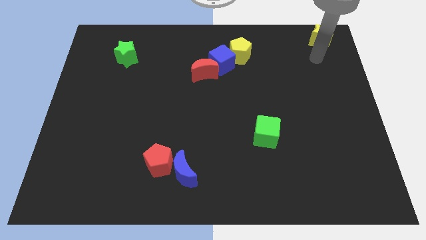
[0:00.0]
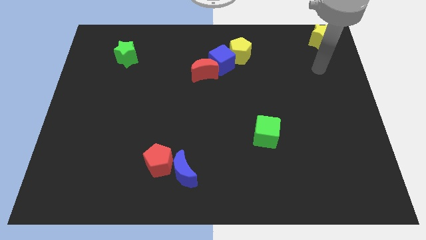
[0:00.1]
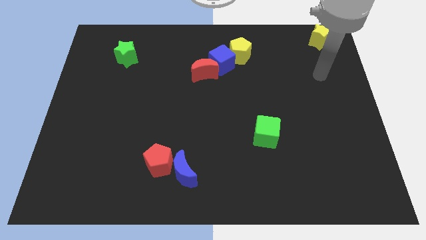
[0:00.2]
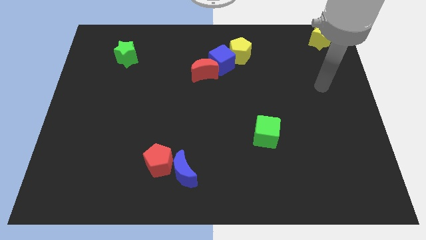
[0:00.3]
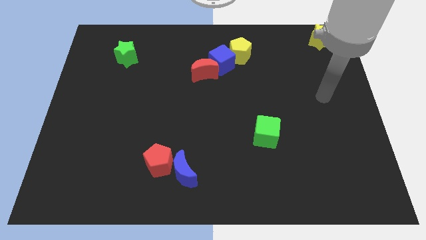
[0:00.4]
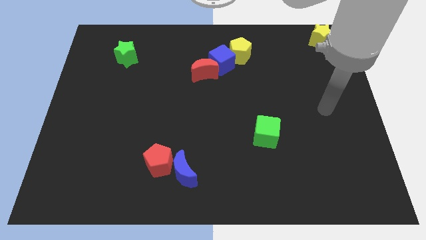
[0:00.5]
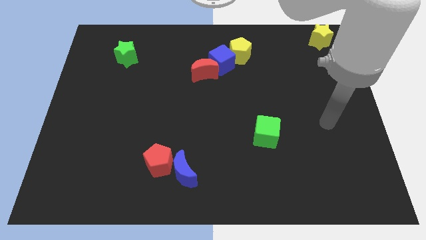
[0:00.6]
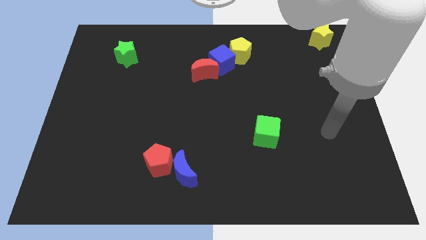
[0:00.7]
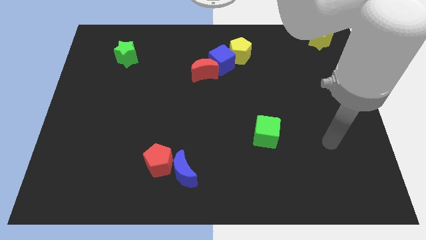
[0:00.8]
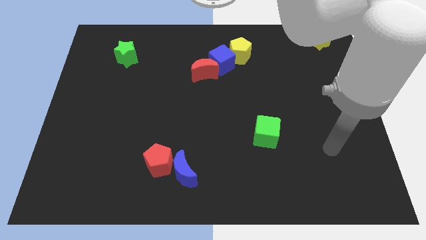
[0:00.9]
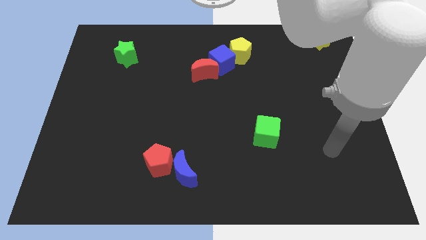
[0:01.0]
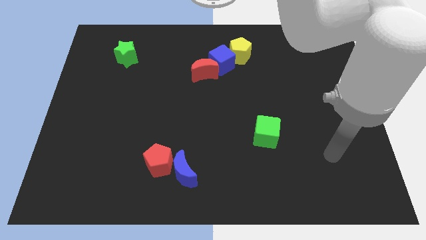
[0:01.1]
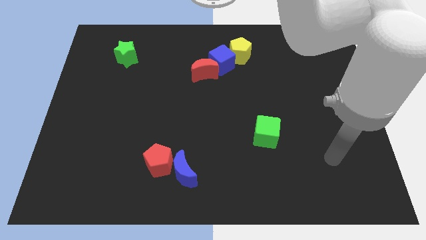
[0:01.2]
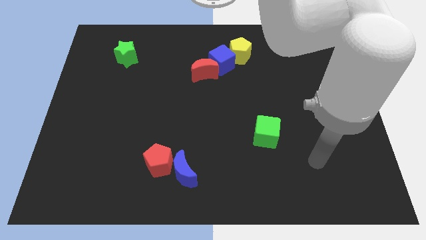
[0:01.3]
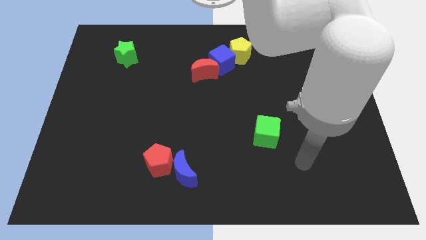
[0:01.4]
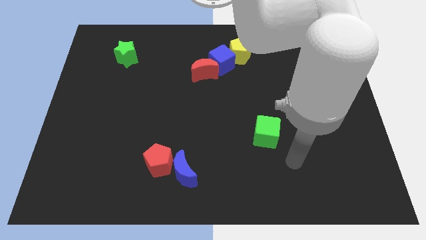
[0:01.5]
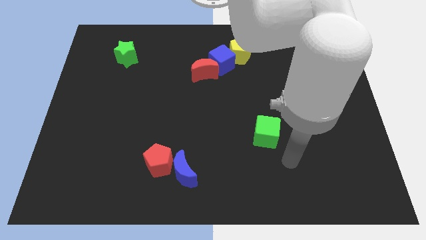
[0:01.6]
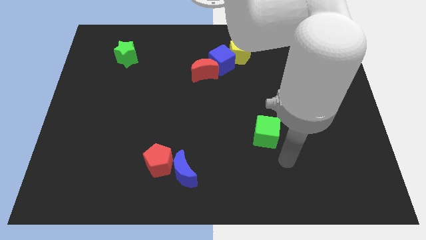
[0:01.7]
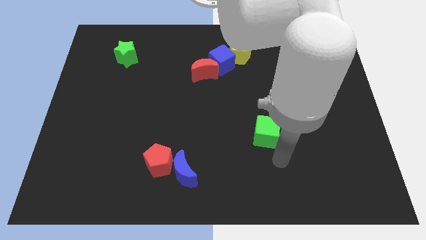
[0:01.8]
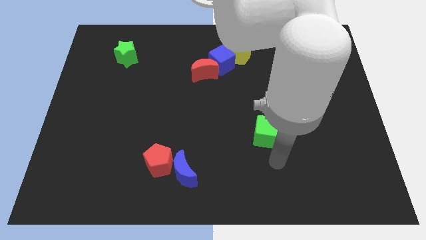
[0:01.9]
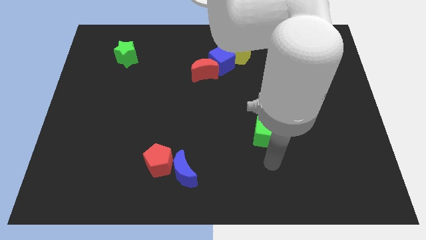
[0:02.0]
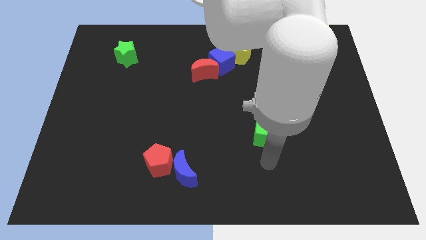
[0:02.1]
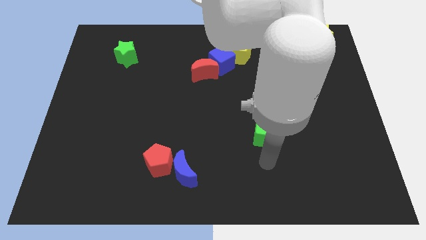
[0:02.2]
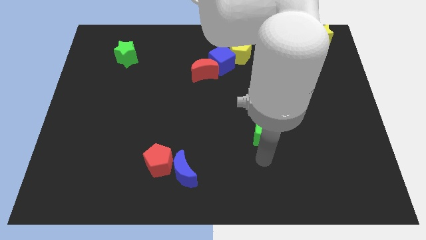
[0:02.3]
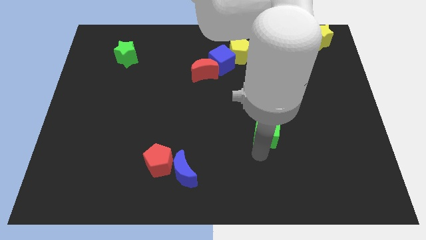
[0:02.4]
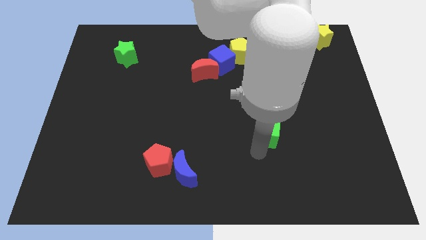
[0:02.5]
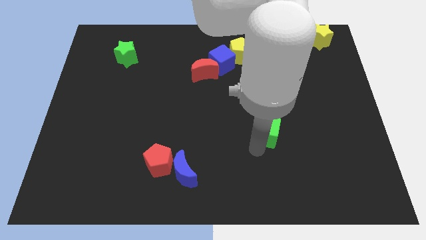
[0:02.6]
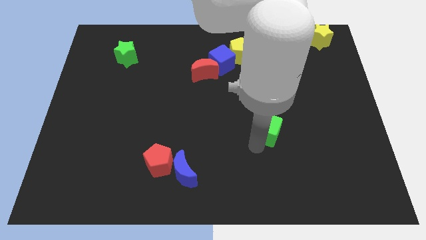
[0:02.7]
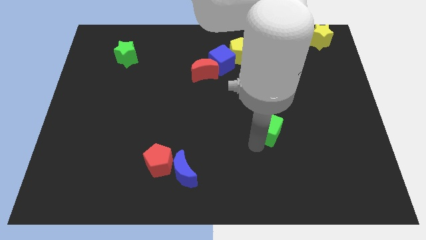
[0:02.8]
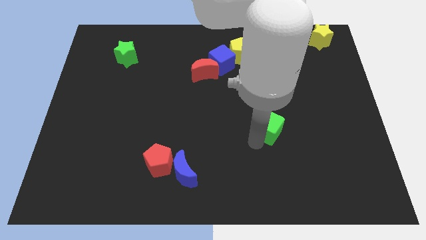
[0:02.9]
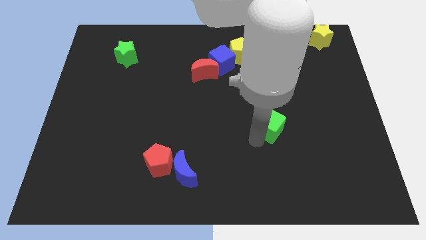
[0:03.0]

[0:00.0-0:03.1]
push the green cube slightly to the top

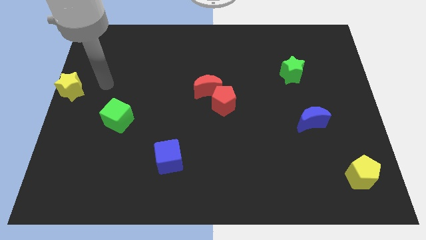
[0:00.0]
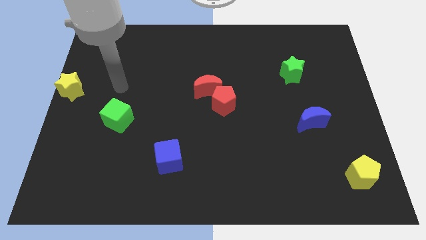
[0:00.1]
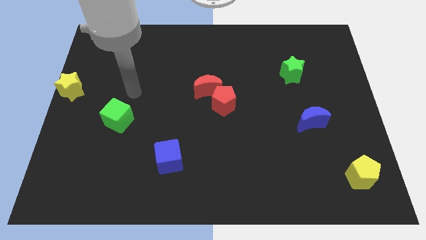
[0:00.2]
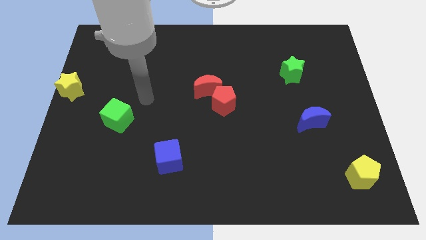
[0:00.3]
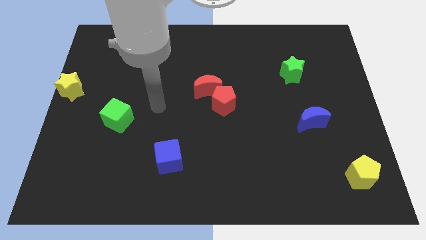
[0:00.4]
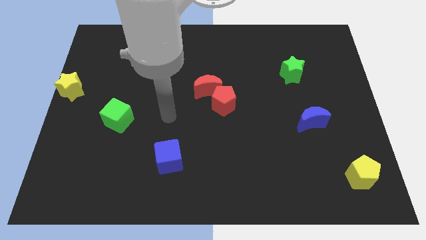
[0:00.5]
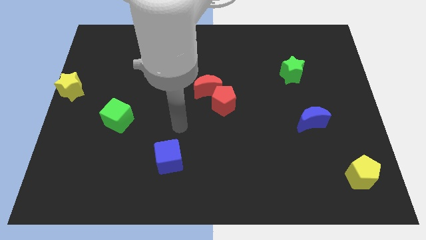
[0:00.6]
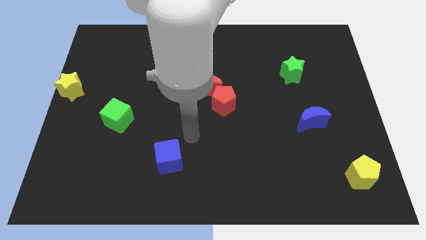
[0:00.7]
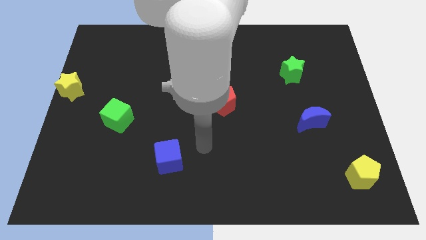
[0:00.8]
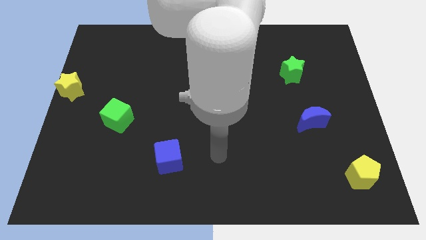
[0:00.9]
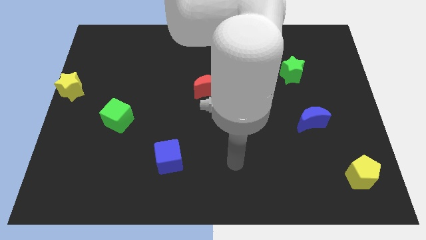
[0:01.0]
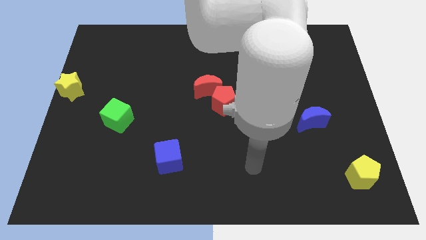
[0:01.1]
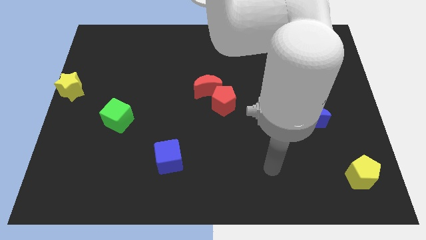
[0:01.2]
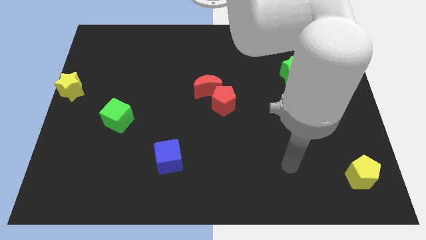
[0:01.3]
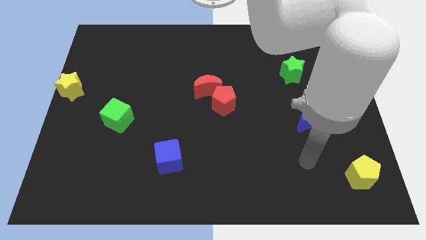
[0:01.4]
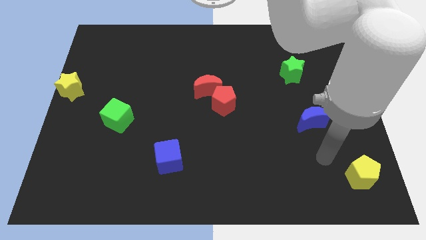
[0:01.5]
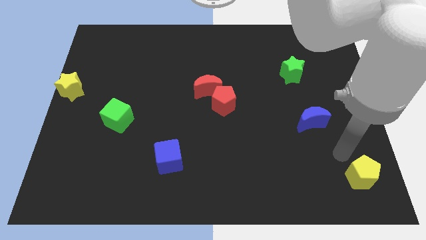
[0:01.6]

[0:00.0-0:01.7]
move the arm towards the top of the yellow pentagon

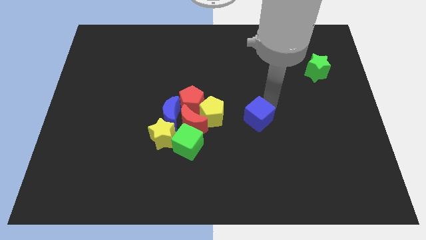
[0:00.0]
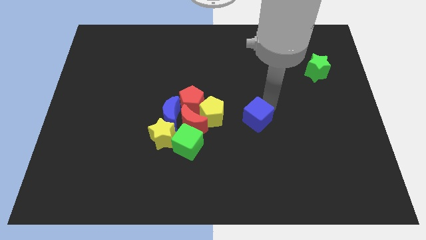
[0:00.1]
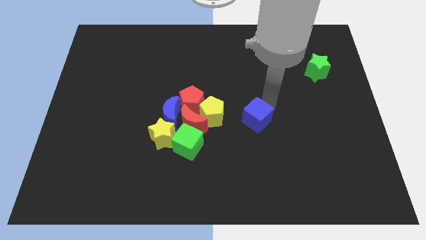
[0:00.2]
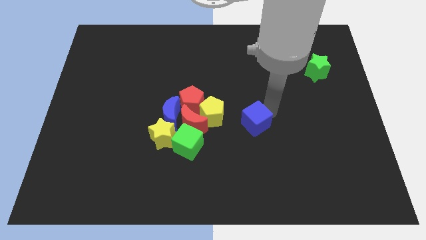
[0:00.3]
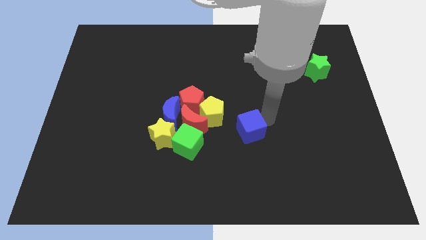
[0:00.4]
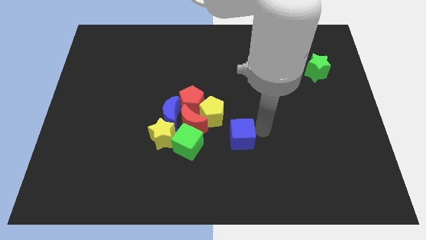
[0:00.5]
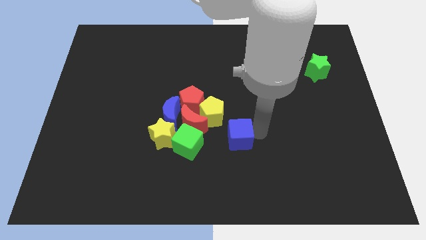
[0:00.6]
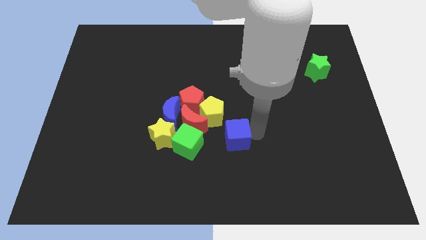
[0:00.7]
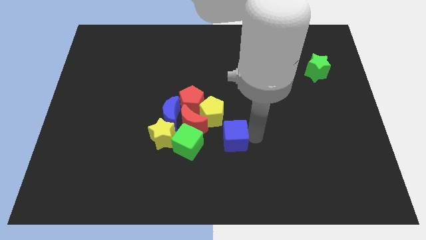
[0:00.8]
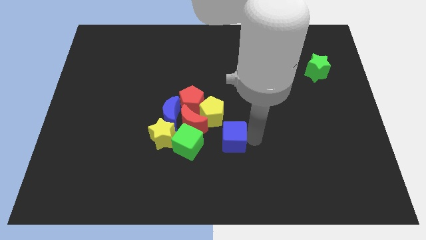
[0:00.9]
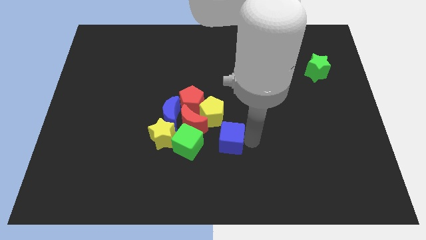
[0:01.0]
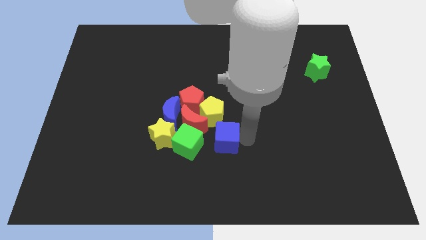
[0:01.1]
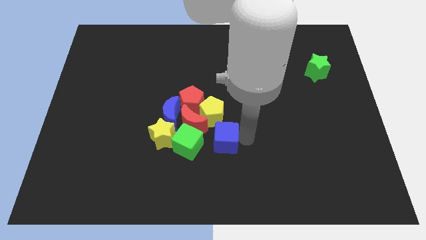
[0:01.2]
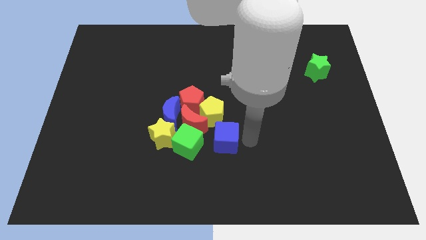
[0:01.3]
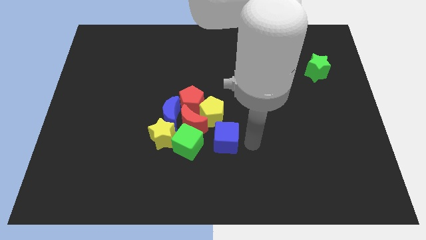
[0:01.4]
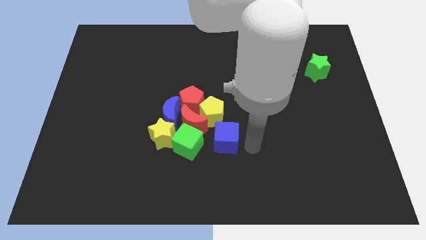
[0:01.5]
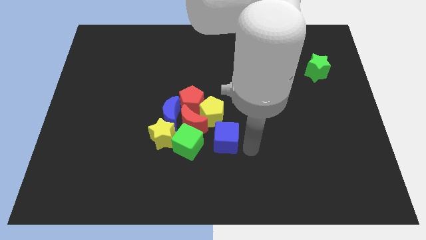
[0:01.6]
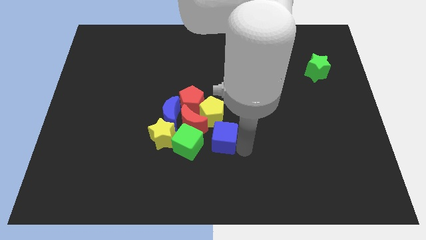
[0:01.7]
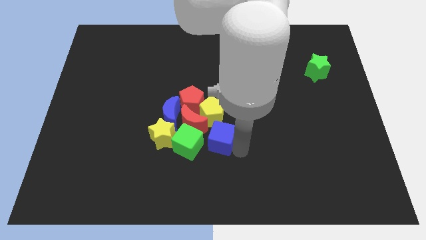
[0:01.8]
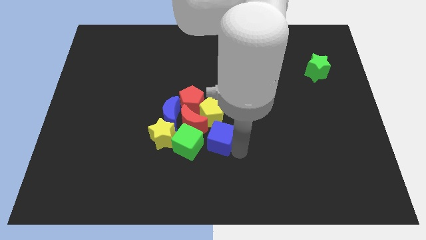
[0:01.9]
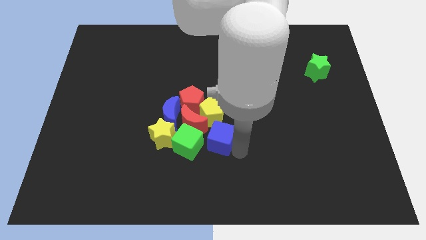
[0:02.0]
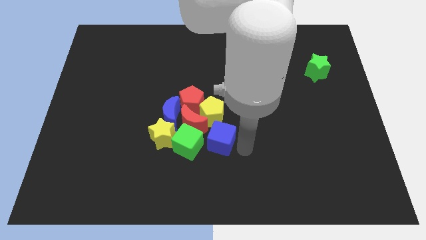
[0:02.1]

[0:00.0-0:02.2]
place the blue cube to the right of the green cube

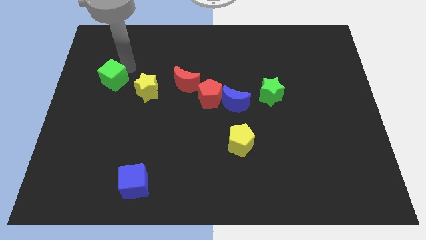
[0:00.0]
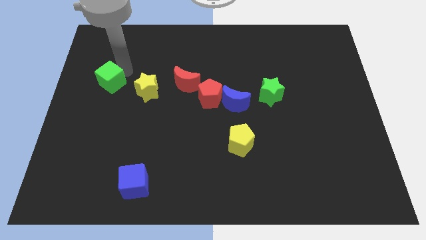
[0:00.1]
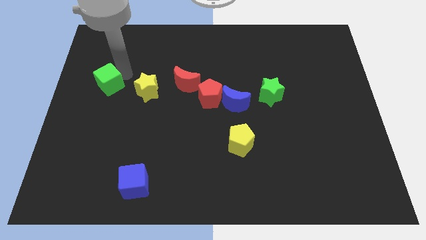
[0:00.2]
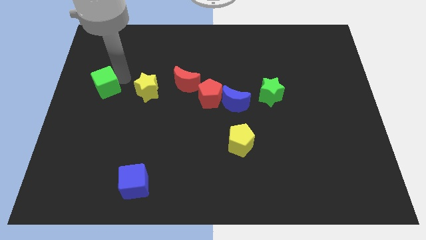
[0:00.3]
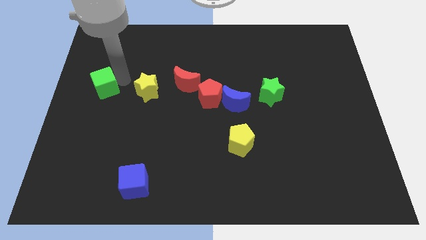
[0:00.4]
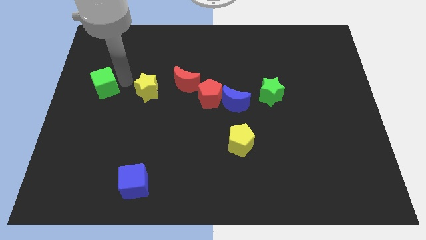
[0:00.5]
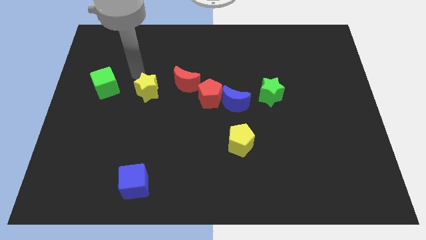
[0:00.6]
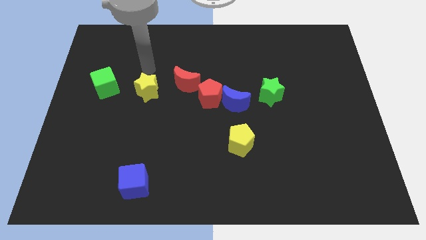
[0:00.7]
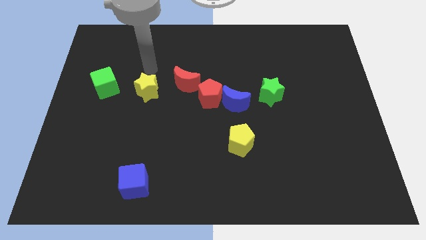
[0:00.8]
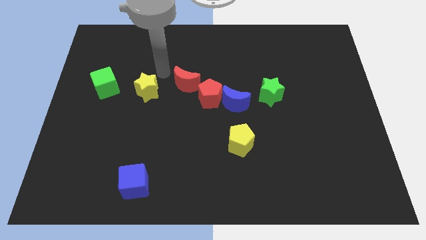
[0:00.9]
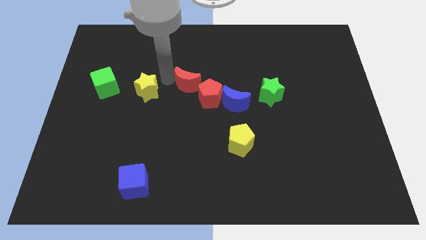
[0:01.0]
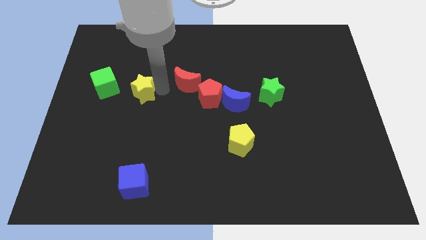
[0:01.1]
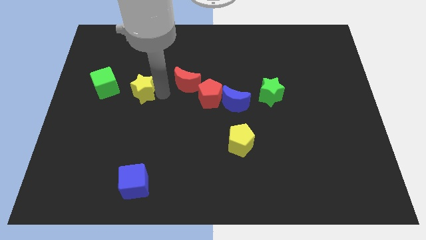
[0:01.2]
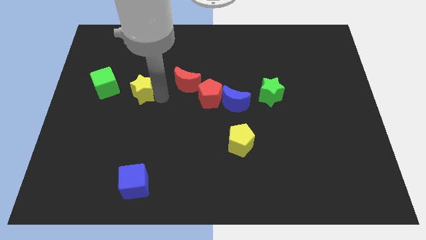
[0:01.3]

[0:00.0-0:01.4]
put the green cube to the left of yellow star

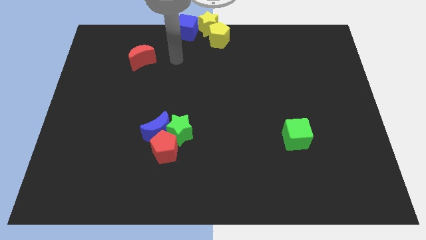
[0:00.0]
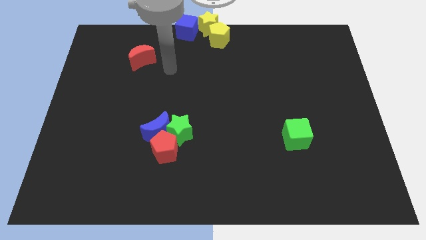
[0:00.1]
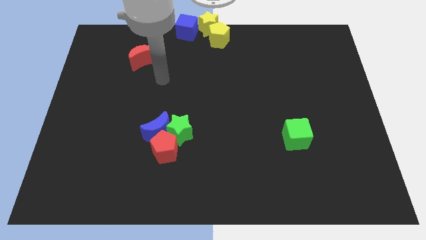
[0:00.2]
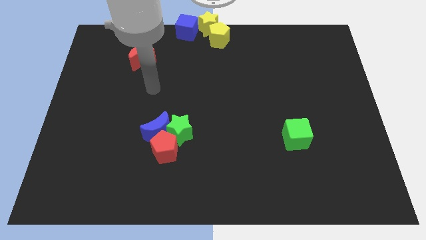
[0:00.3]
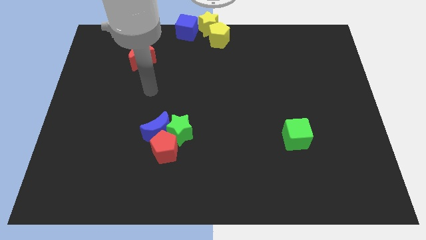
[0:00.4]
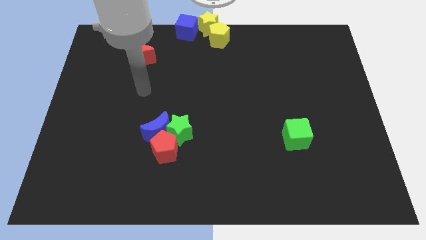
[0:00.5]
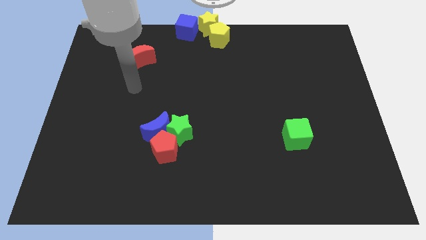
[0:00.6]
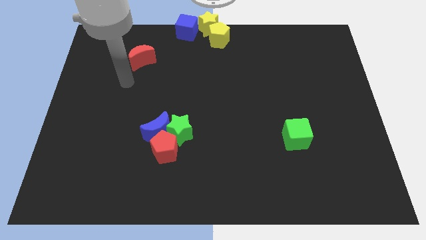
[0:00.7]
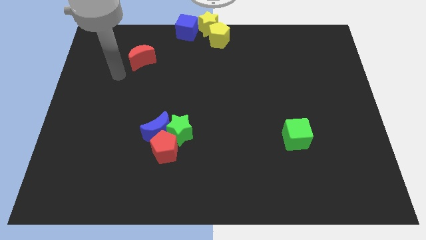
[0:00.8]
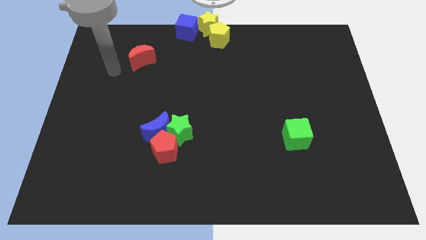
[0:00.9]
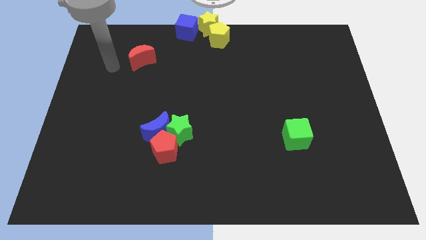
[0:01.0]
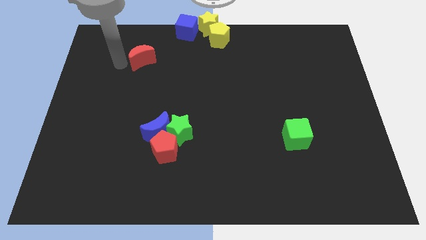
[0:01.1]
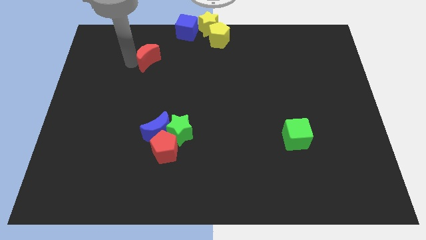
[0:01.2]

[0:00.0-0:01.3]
tap the red crescent
